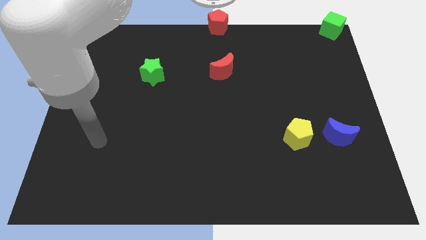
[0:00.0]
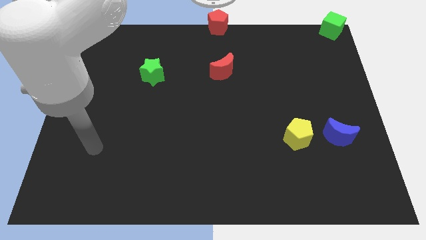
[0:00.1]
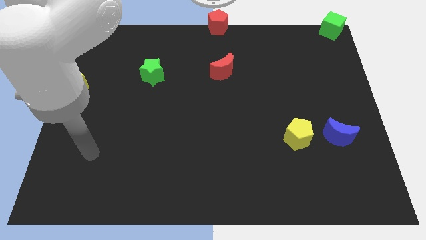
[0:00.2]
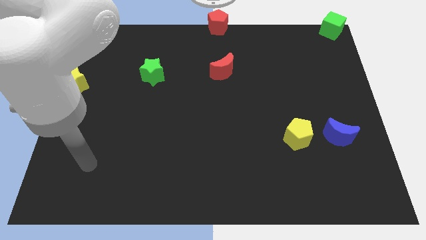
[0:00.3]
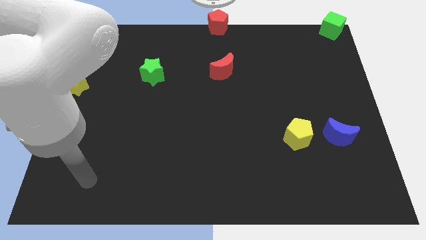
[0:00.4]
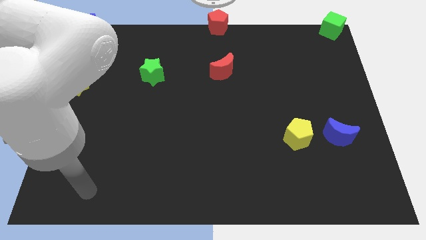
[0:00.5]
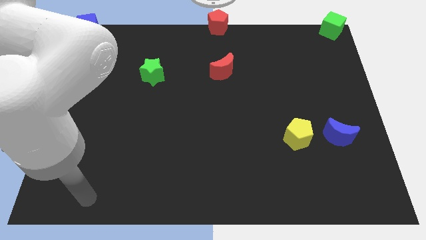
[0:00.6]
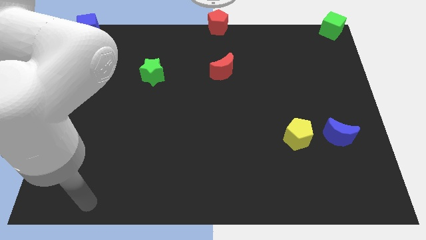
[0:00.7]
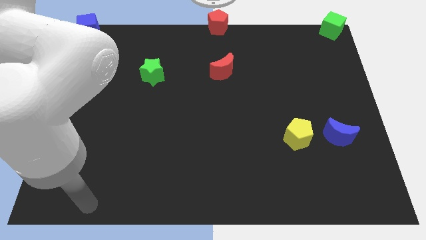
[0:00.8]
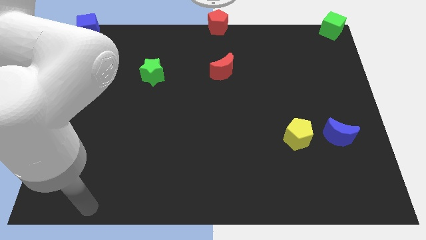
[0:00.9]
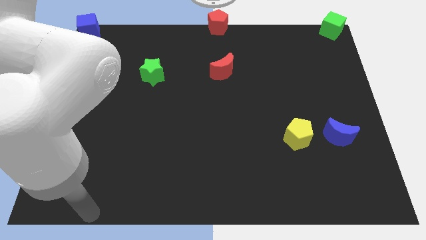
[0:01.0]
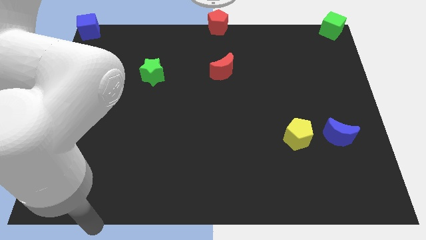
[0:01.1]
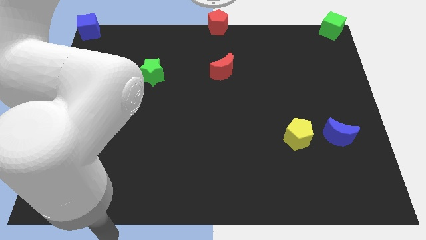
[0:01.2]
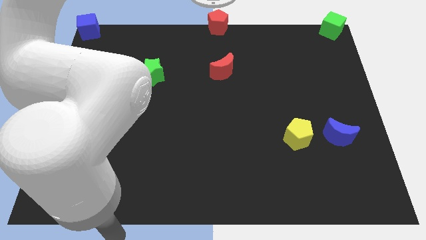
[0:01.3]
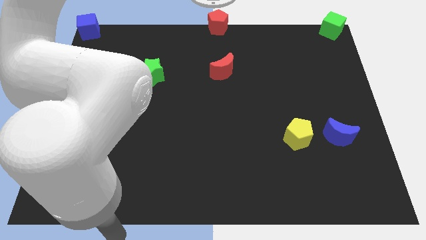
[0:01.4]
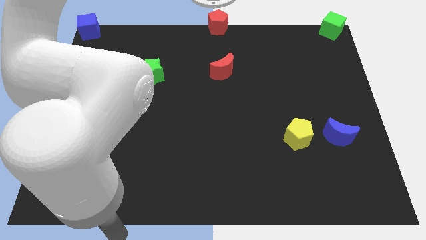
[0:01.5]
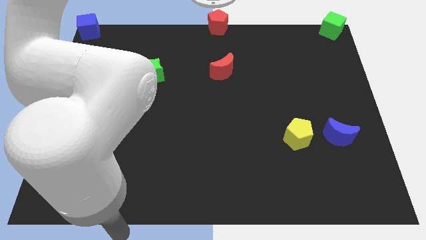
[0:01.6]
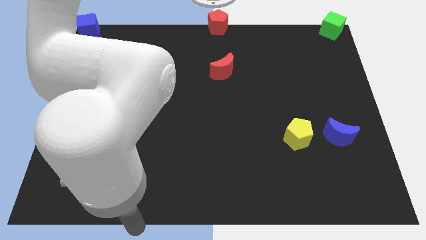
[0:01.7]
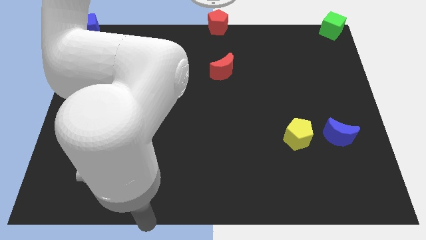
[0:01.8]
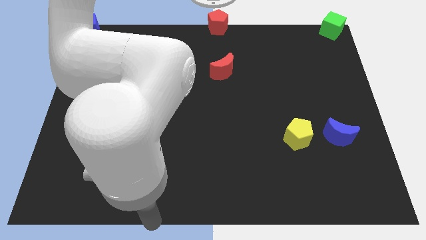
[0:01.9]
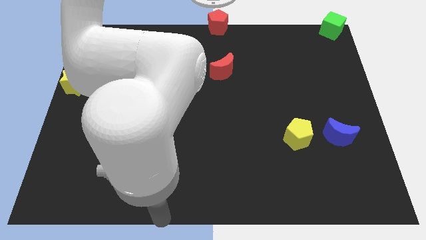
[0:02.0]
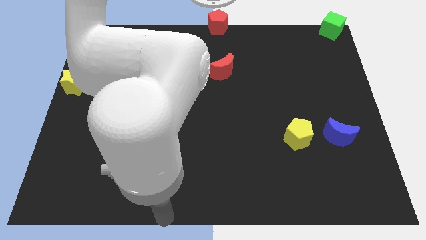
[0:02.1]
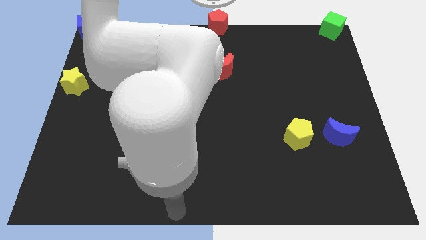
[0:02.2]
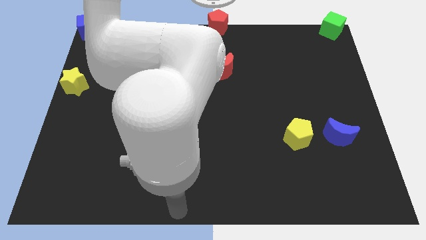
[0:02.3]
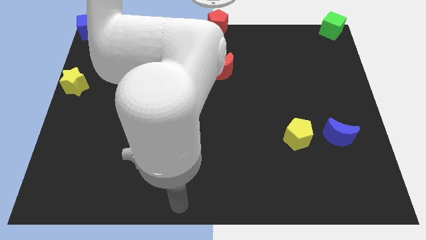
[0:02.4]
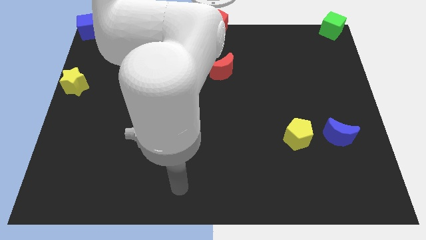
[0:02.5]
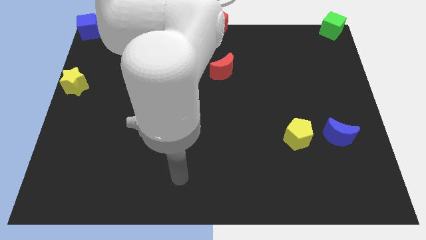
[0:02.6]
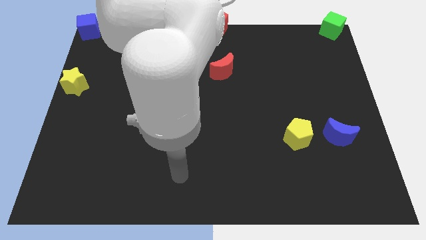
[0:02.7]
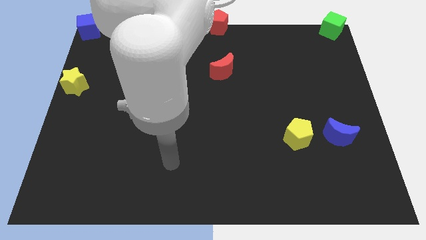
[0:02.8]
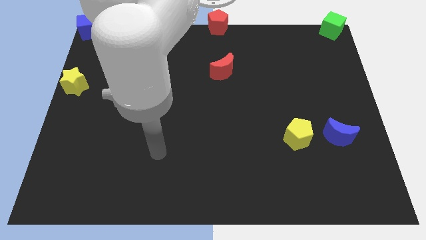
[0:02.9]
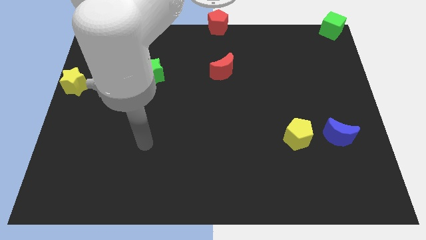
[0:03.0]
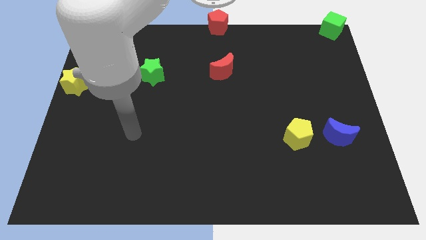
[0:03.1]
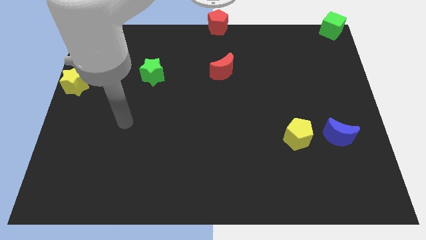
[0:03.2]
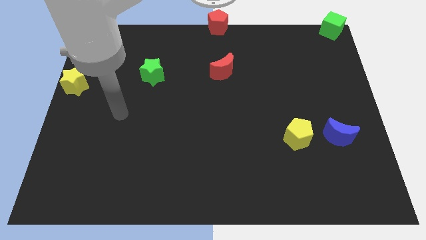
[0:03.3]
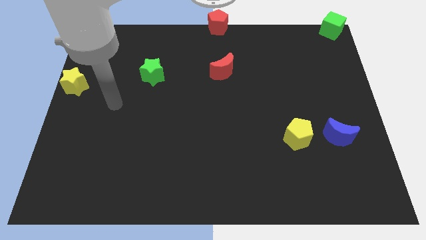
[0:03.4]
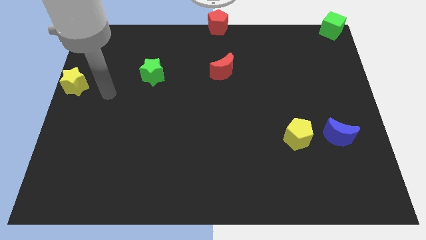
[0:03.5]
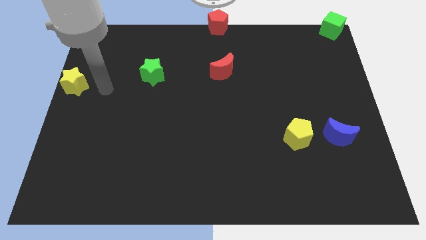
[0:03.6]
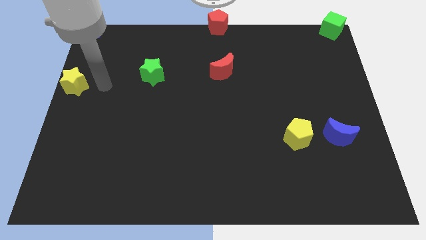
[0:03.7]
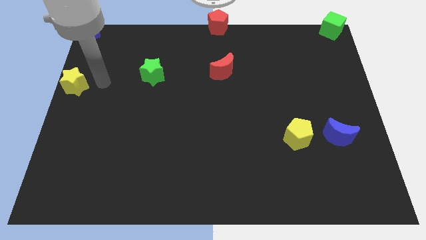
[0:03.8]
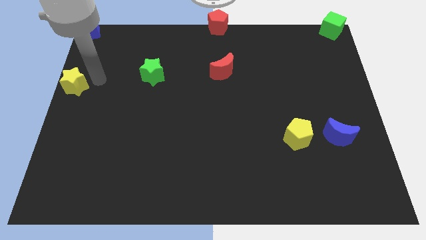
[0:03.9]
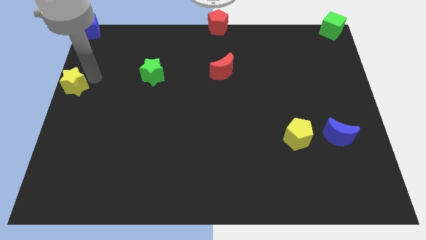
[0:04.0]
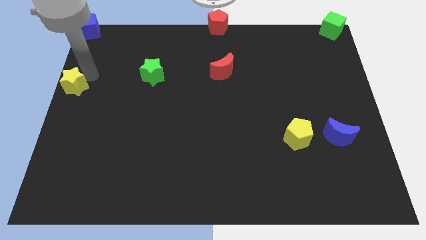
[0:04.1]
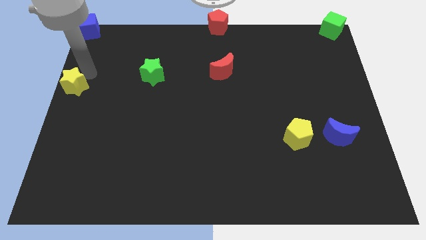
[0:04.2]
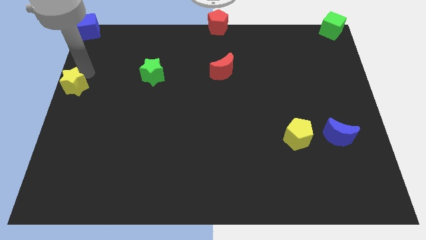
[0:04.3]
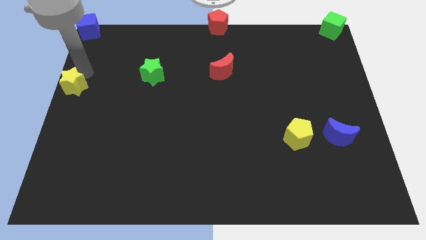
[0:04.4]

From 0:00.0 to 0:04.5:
move your hand towards the yellow star

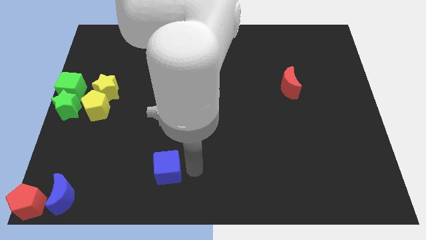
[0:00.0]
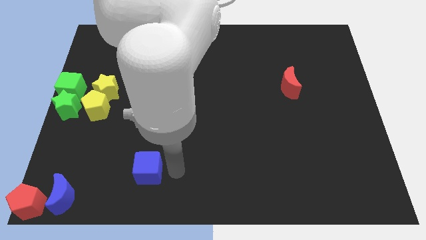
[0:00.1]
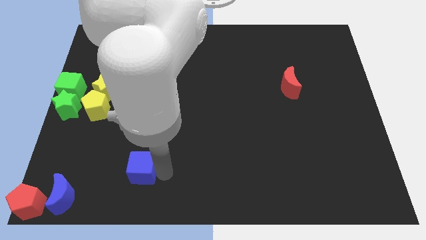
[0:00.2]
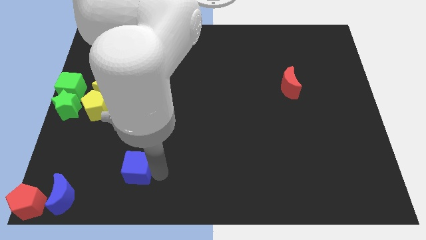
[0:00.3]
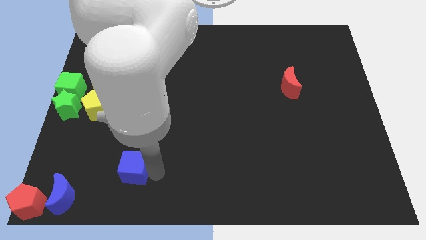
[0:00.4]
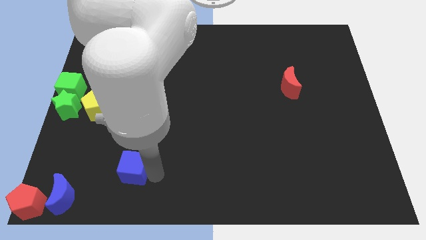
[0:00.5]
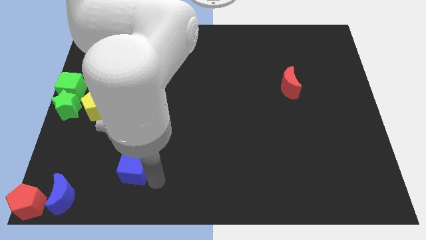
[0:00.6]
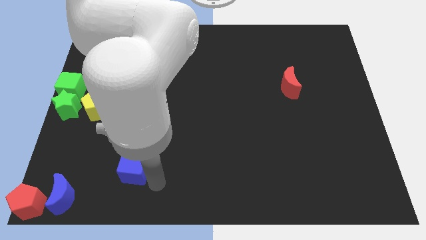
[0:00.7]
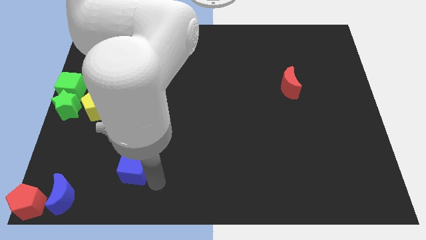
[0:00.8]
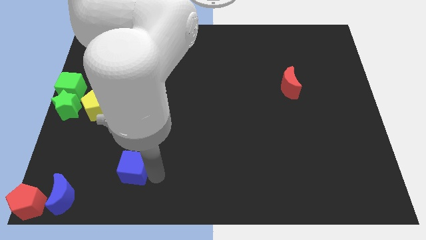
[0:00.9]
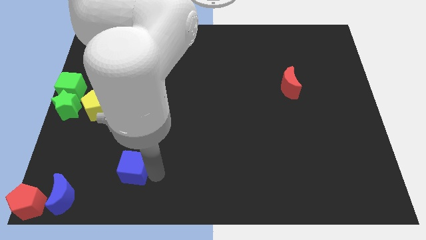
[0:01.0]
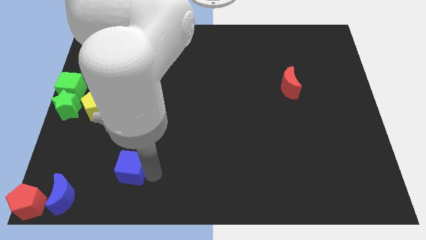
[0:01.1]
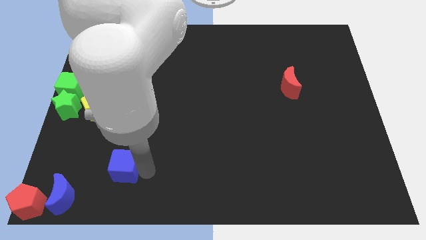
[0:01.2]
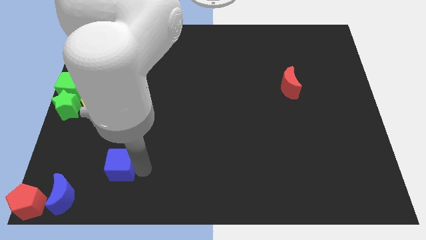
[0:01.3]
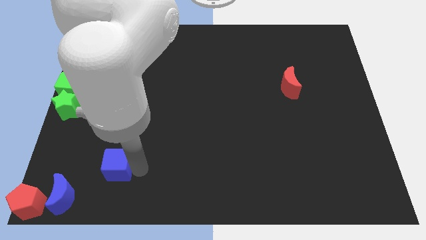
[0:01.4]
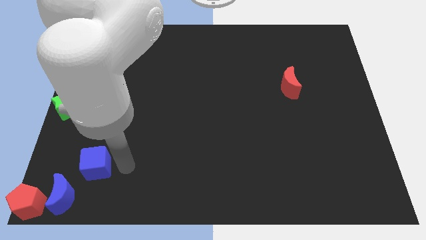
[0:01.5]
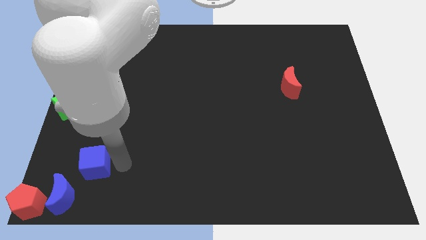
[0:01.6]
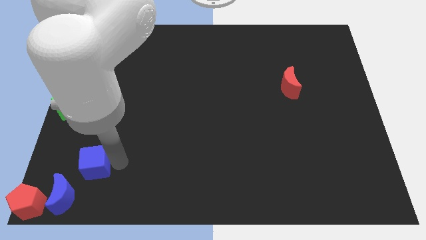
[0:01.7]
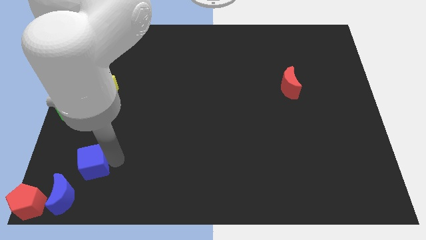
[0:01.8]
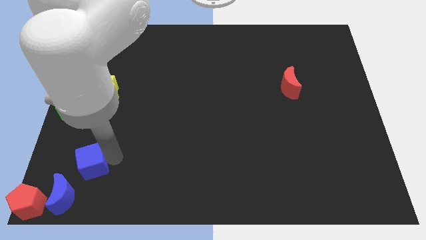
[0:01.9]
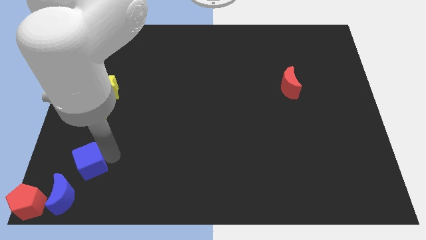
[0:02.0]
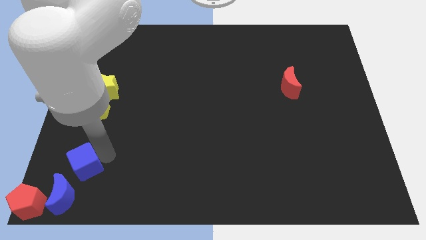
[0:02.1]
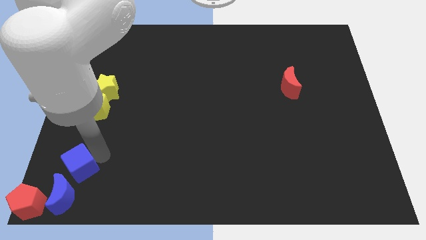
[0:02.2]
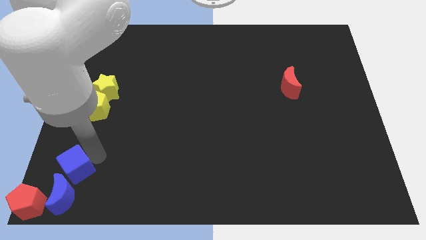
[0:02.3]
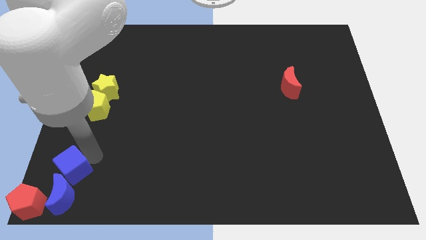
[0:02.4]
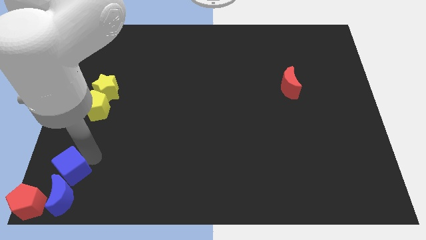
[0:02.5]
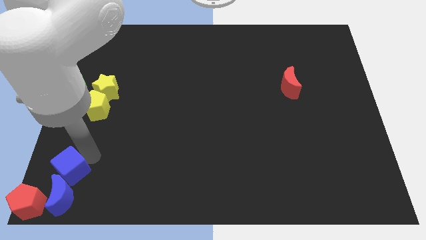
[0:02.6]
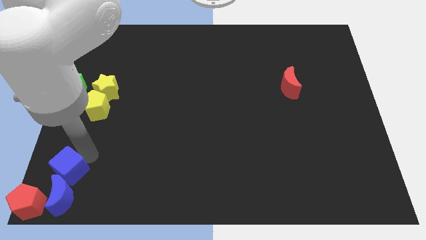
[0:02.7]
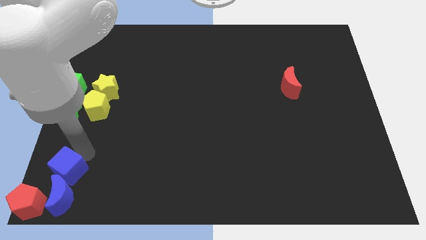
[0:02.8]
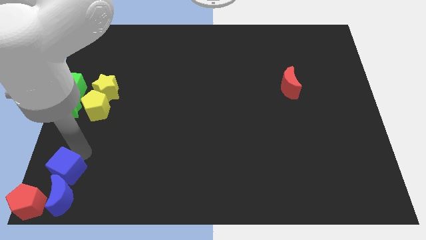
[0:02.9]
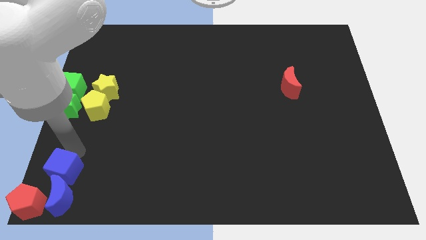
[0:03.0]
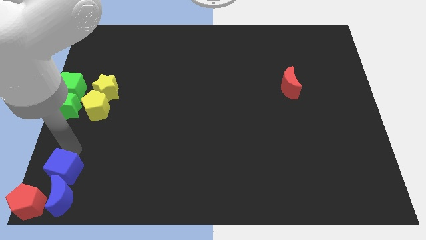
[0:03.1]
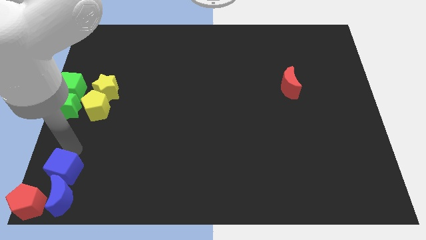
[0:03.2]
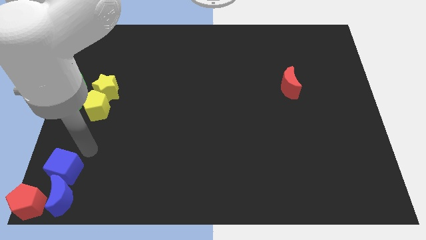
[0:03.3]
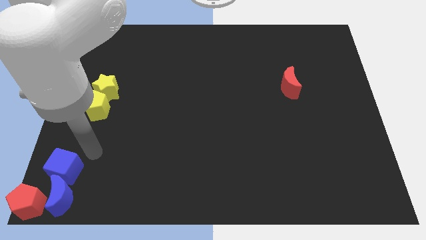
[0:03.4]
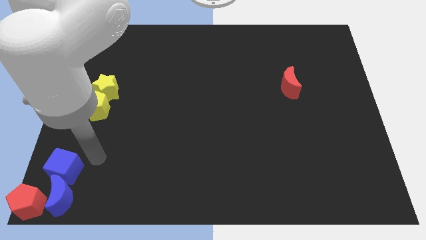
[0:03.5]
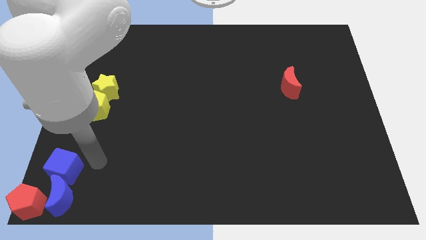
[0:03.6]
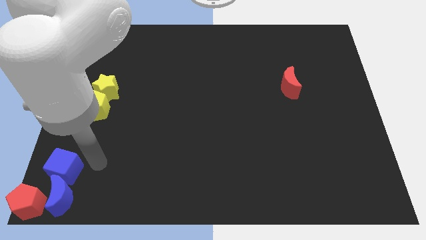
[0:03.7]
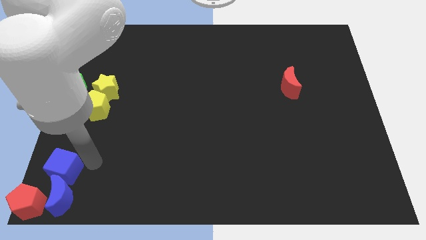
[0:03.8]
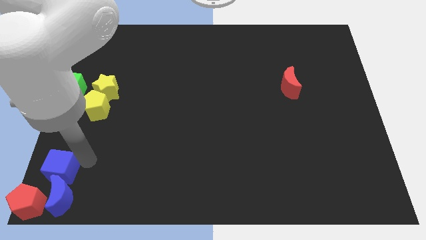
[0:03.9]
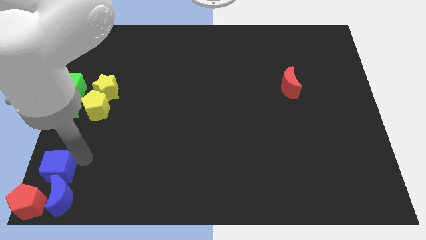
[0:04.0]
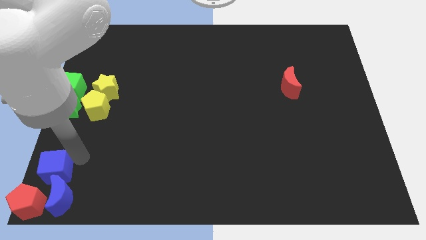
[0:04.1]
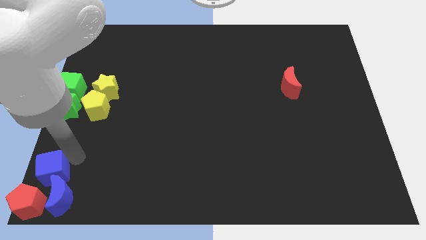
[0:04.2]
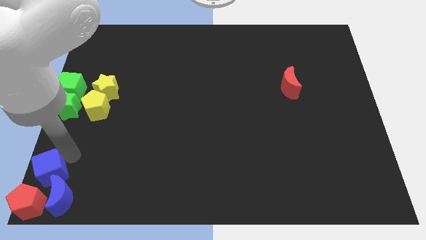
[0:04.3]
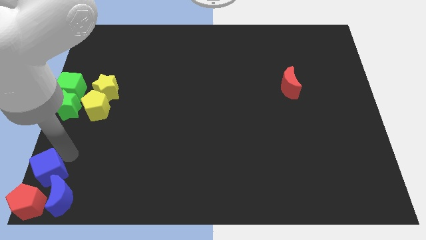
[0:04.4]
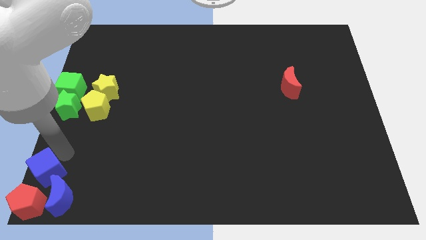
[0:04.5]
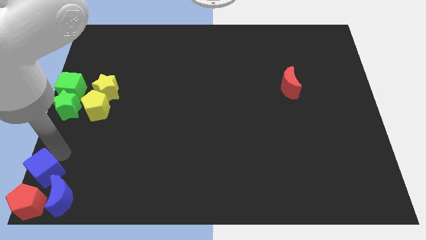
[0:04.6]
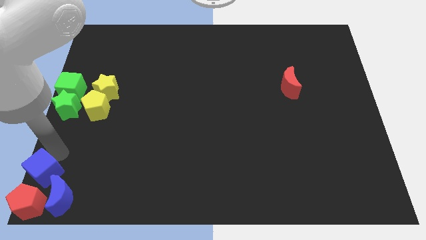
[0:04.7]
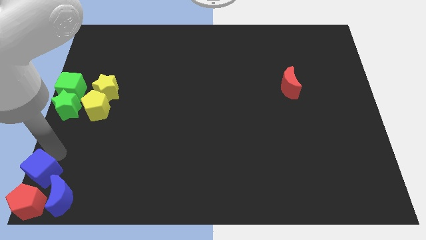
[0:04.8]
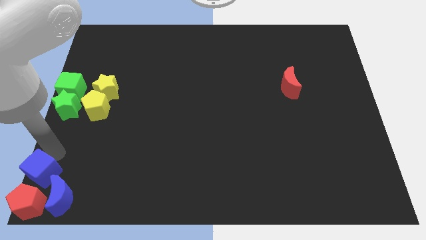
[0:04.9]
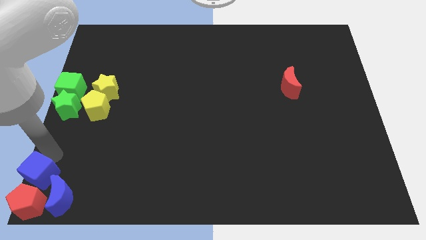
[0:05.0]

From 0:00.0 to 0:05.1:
move the blue cube to the top of the red pentagon
